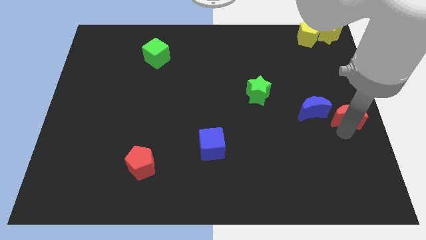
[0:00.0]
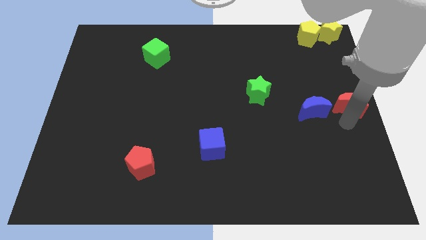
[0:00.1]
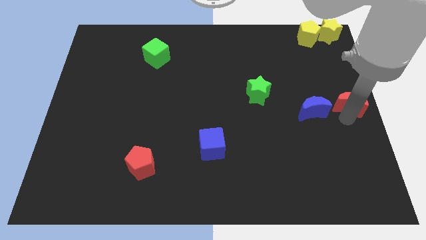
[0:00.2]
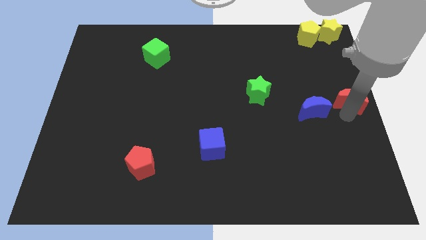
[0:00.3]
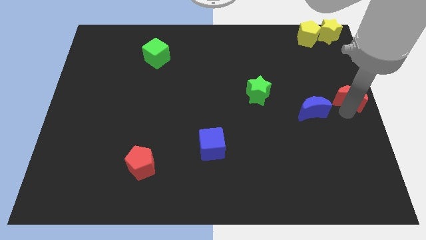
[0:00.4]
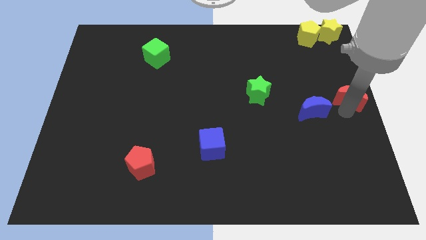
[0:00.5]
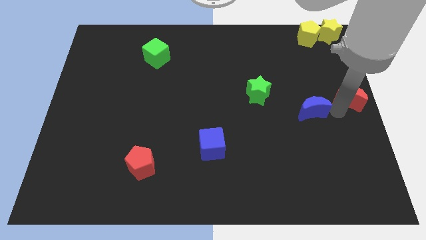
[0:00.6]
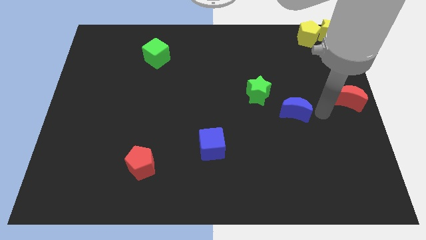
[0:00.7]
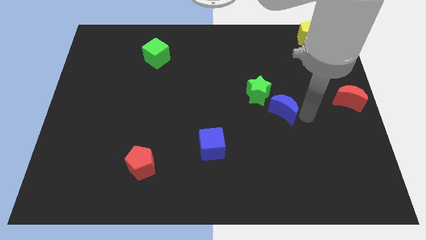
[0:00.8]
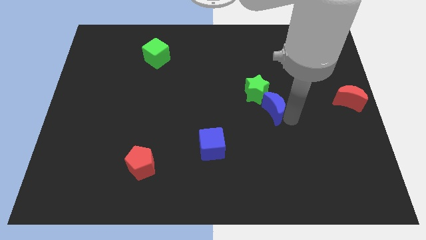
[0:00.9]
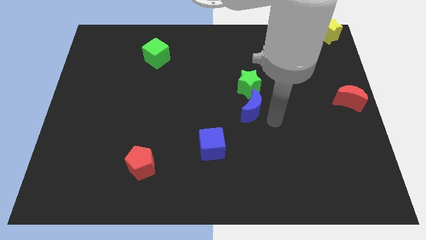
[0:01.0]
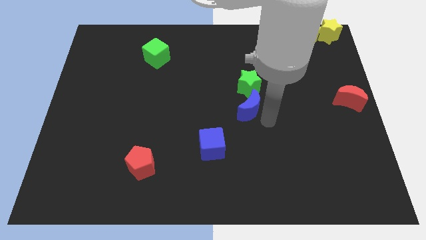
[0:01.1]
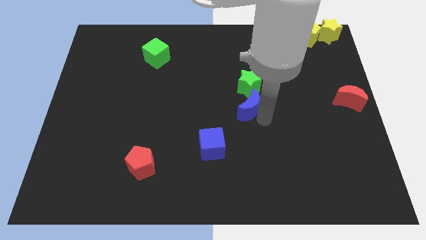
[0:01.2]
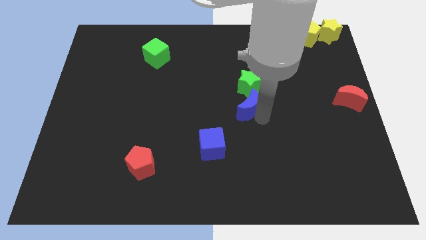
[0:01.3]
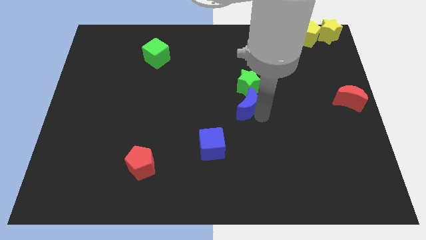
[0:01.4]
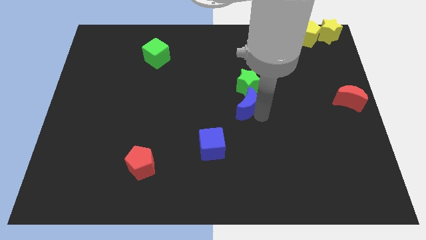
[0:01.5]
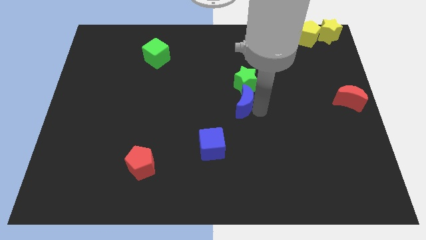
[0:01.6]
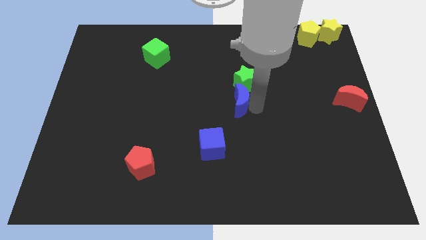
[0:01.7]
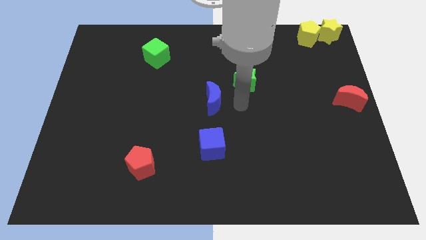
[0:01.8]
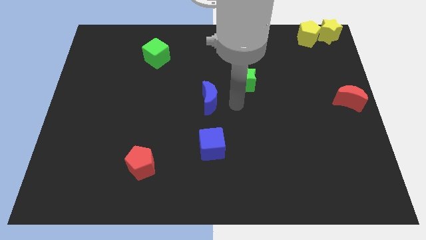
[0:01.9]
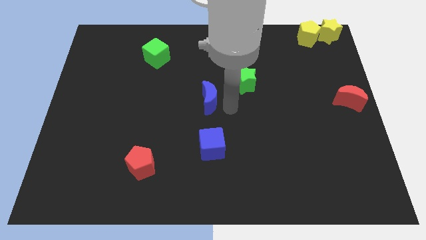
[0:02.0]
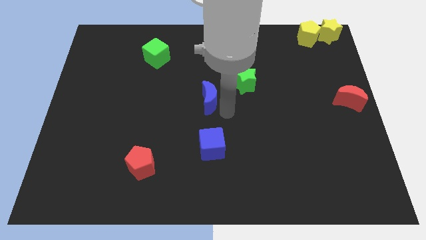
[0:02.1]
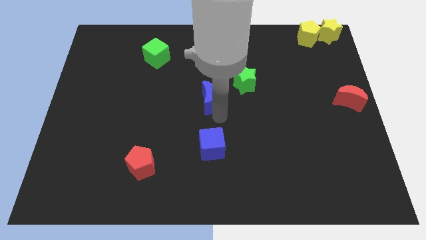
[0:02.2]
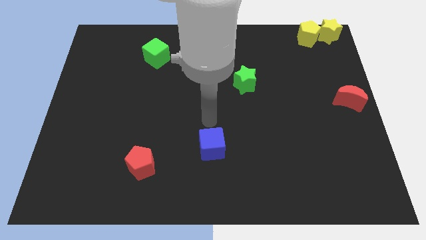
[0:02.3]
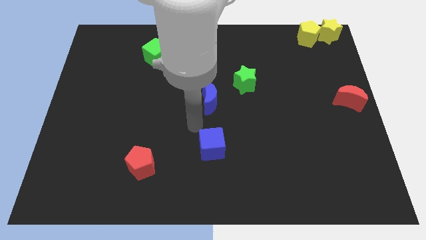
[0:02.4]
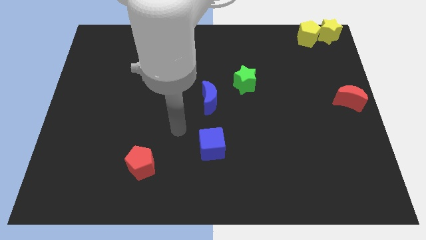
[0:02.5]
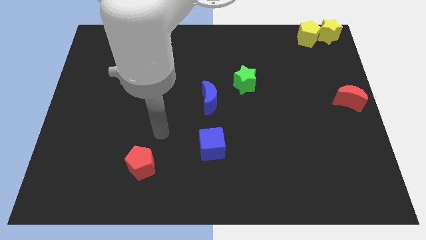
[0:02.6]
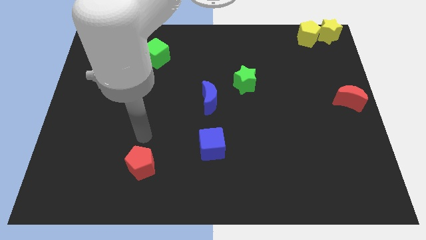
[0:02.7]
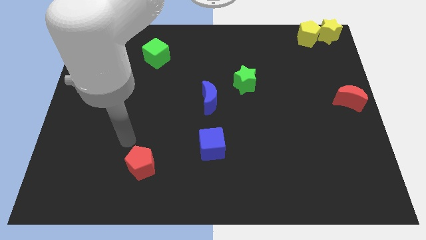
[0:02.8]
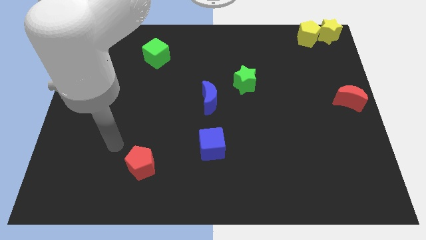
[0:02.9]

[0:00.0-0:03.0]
place the blue crescent in center of the board

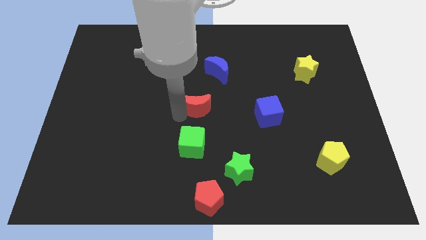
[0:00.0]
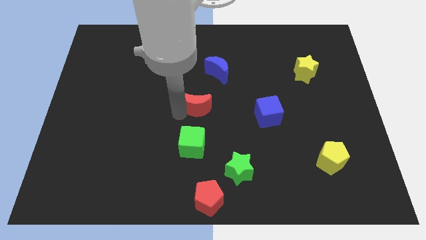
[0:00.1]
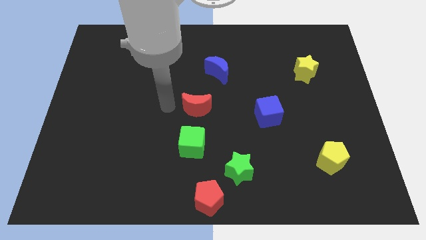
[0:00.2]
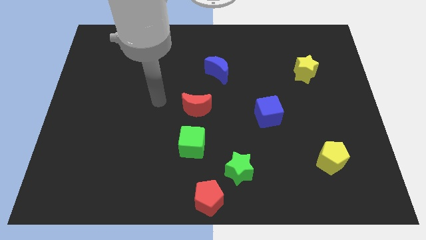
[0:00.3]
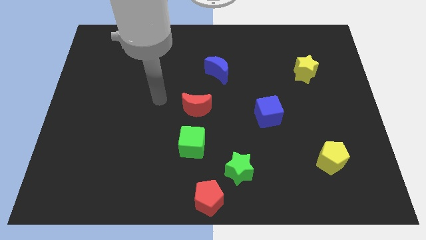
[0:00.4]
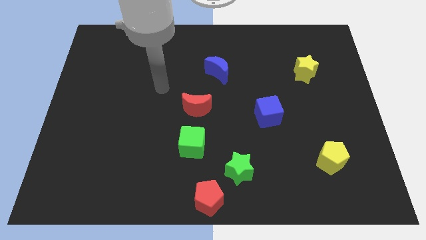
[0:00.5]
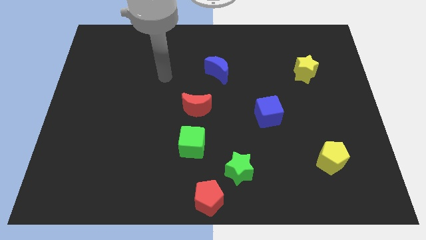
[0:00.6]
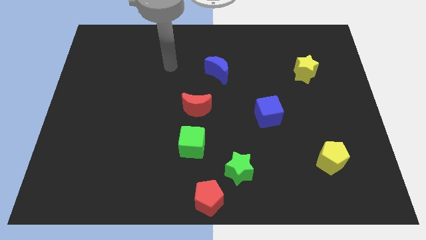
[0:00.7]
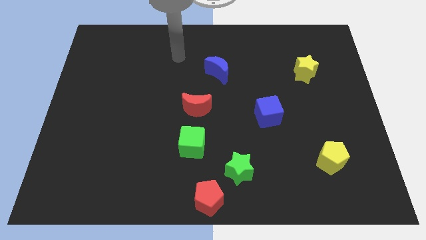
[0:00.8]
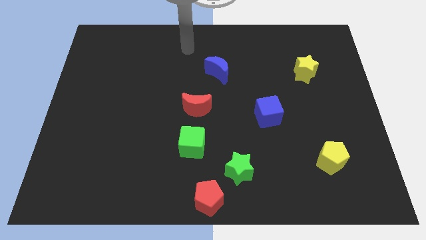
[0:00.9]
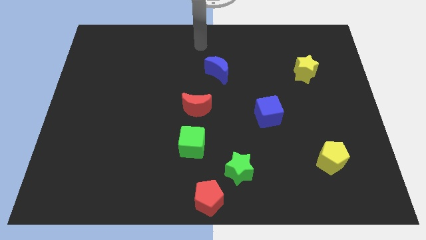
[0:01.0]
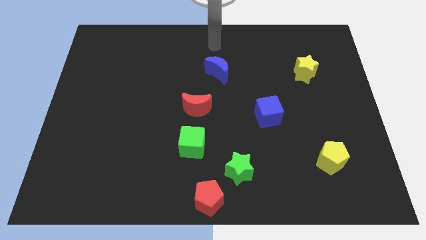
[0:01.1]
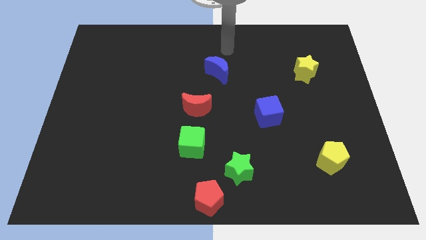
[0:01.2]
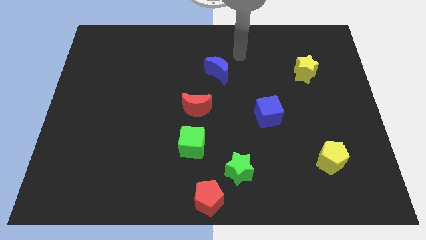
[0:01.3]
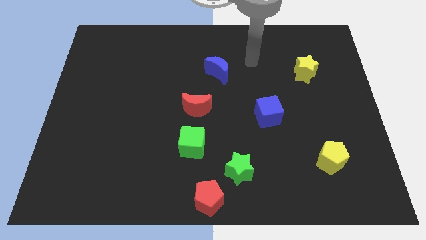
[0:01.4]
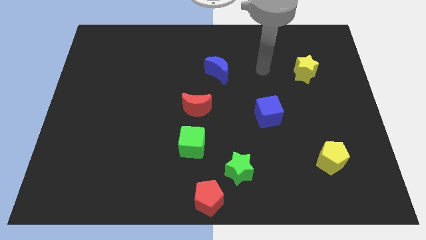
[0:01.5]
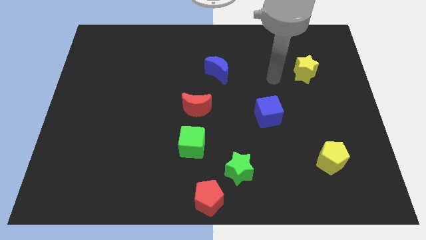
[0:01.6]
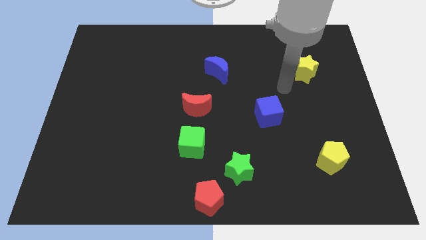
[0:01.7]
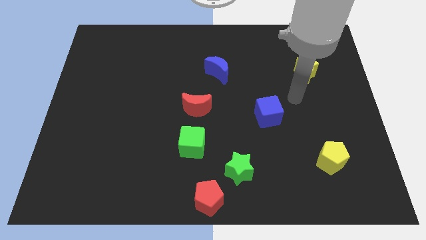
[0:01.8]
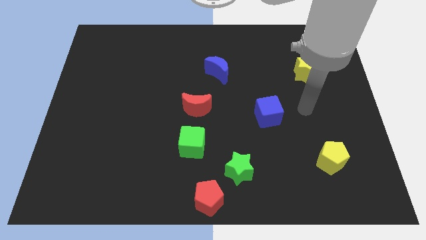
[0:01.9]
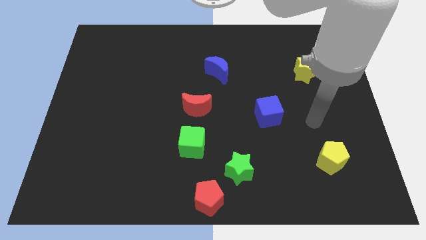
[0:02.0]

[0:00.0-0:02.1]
place your hand at right side of the blue square

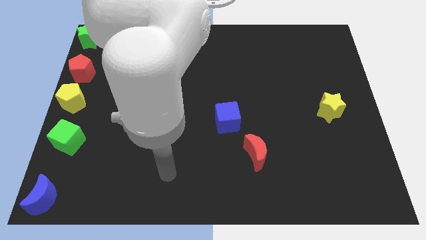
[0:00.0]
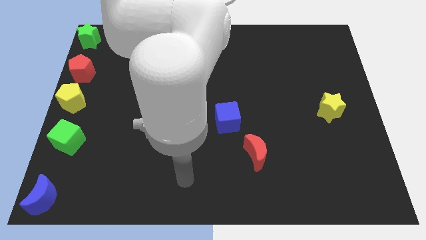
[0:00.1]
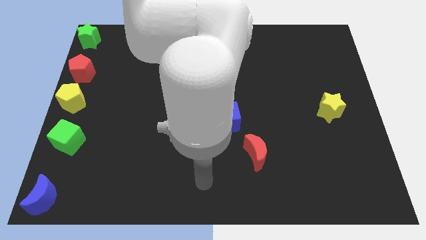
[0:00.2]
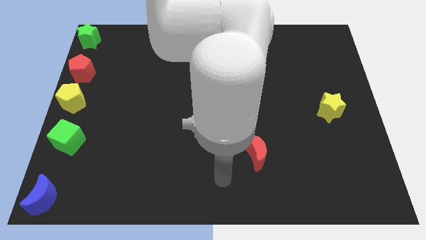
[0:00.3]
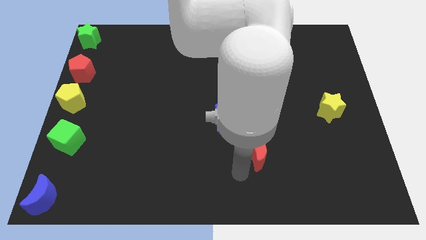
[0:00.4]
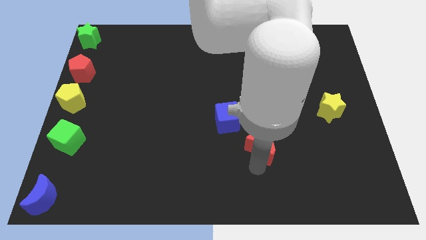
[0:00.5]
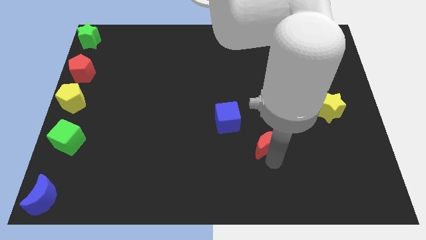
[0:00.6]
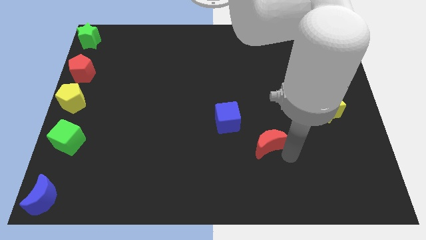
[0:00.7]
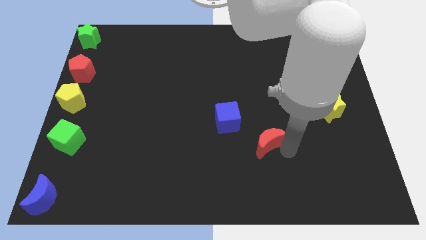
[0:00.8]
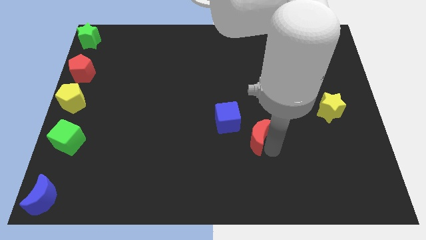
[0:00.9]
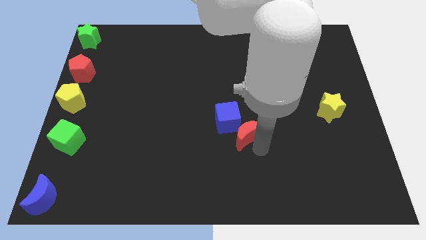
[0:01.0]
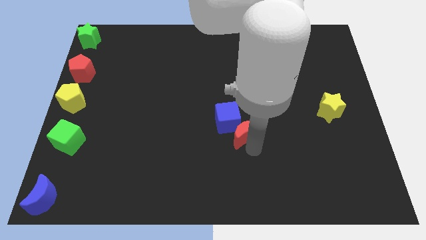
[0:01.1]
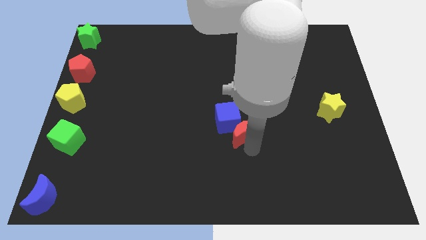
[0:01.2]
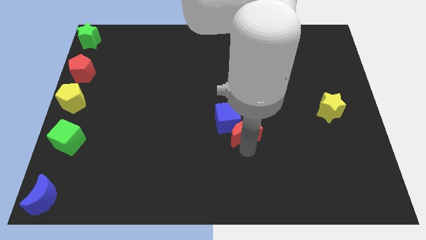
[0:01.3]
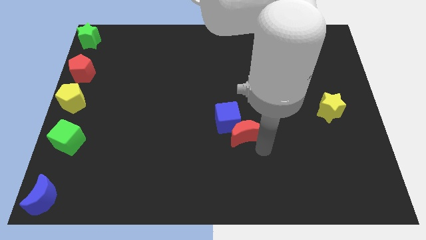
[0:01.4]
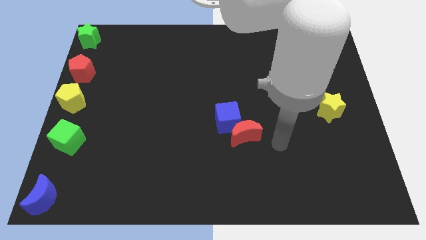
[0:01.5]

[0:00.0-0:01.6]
make the red crescent to touch the blue cube

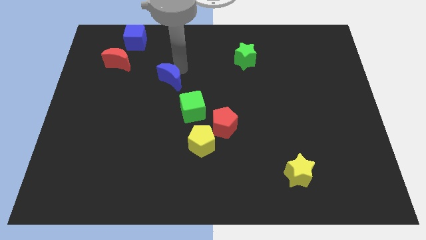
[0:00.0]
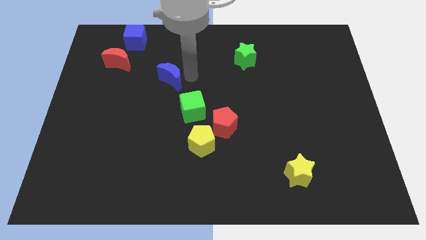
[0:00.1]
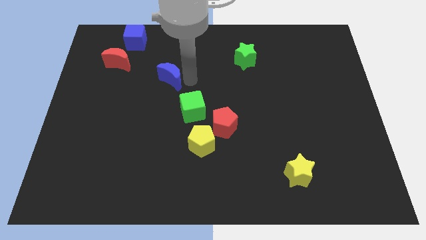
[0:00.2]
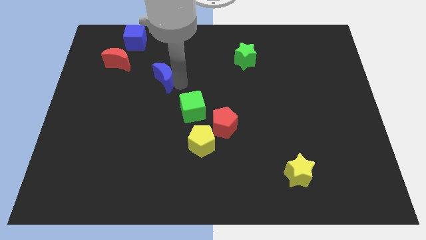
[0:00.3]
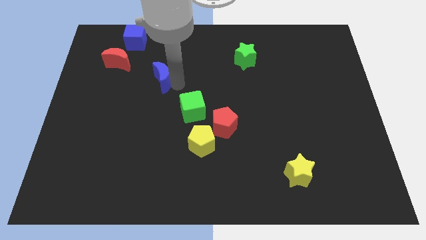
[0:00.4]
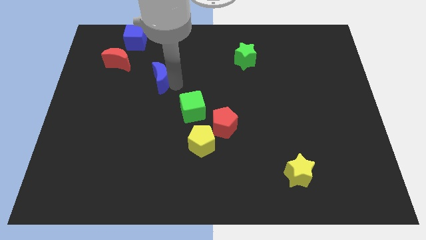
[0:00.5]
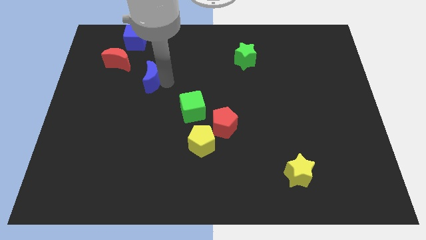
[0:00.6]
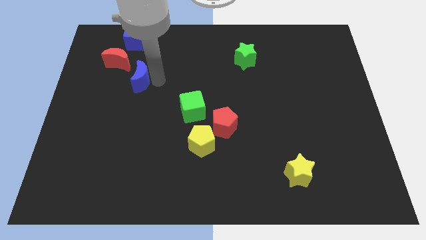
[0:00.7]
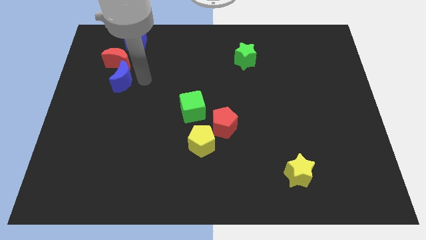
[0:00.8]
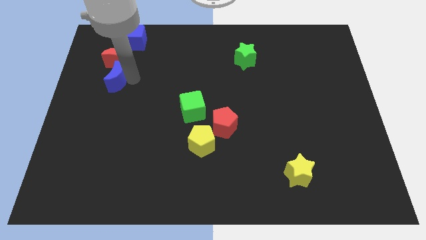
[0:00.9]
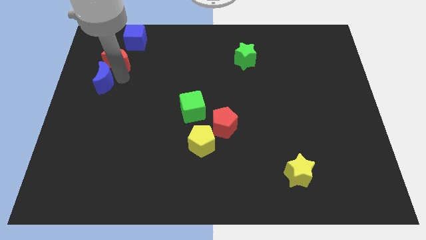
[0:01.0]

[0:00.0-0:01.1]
push blue crescent below red crescent

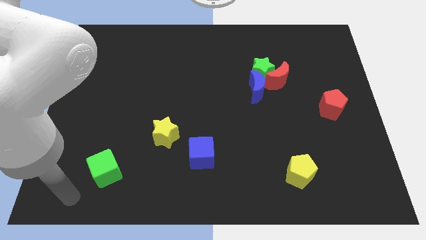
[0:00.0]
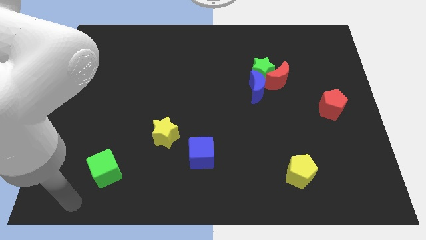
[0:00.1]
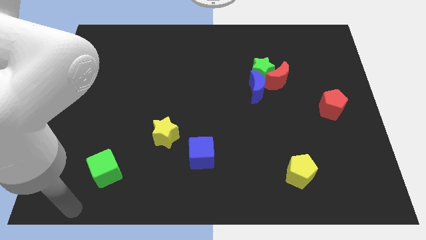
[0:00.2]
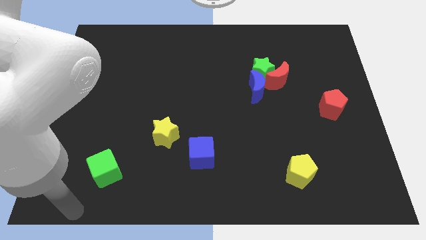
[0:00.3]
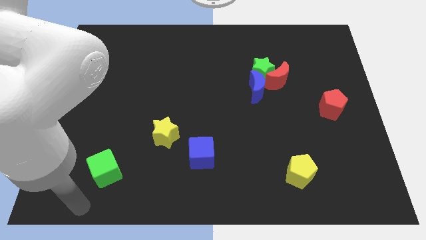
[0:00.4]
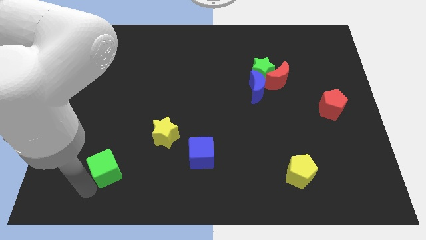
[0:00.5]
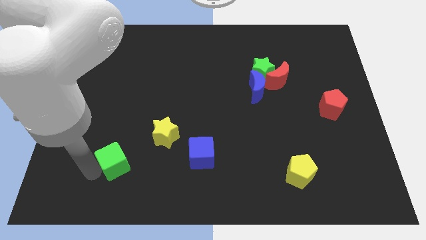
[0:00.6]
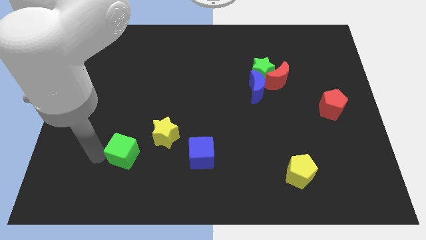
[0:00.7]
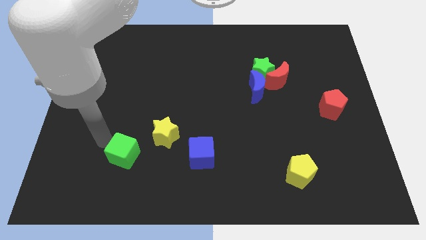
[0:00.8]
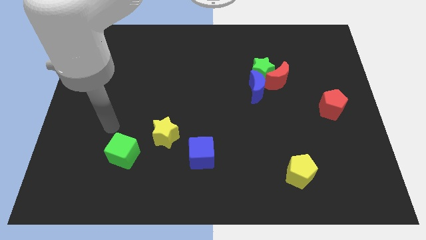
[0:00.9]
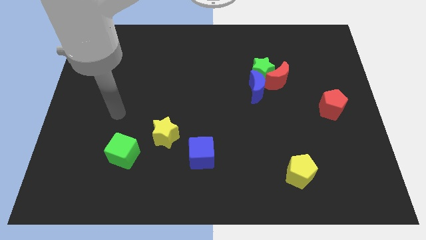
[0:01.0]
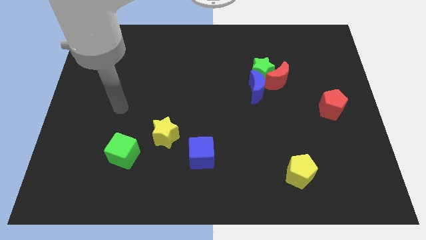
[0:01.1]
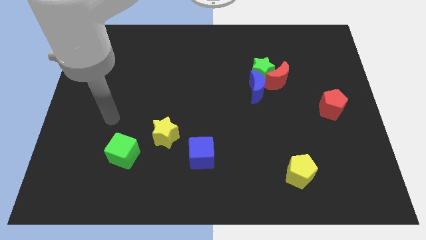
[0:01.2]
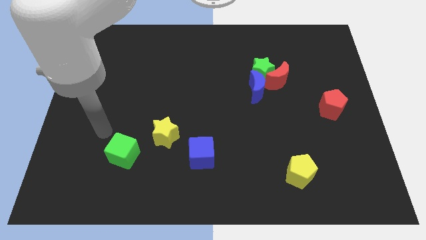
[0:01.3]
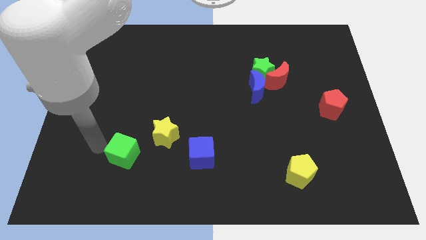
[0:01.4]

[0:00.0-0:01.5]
move the green cube left to the blue cube
